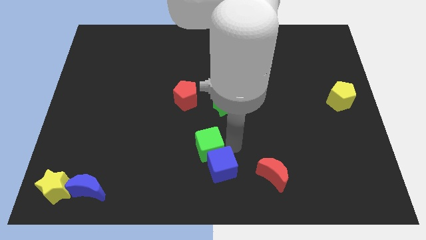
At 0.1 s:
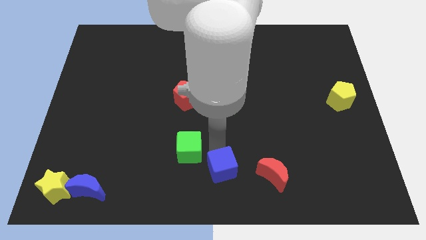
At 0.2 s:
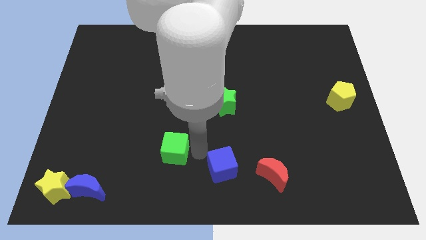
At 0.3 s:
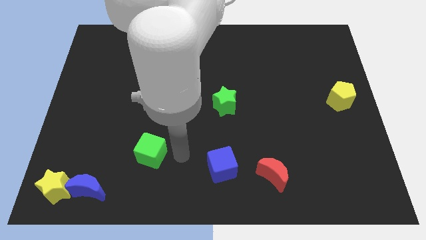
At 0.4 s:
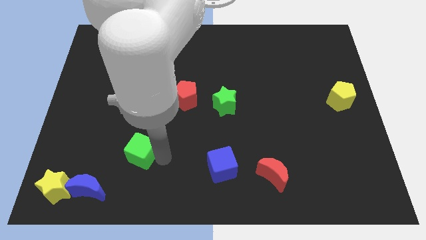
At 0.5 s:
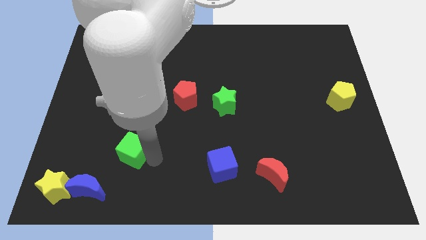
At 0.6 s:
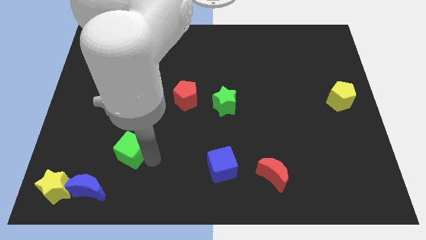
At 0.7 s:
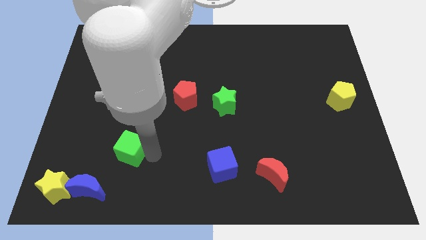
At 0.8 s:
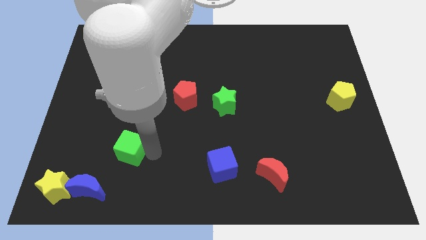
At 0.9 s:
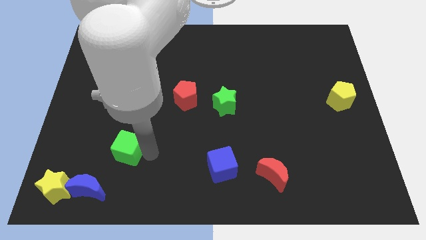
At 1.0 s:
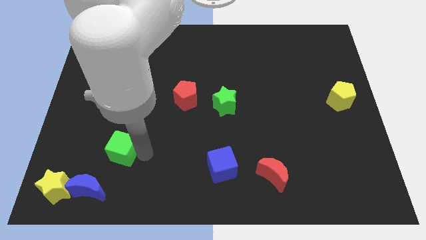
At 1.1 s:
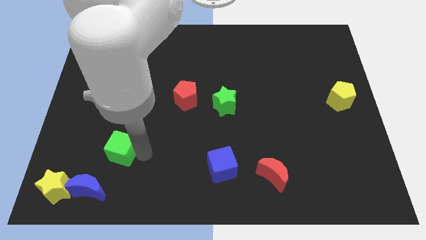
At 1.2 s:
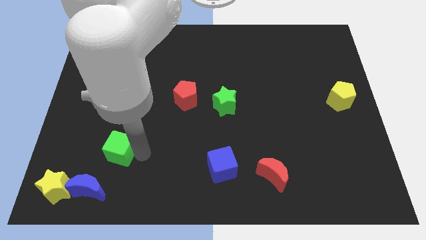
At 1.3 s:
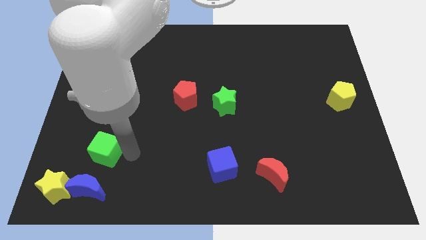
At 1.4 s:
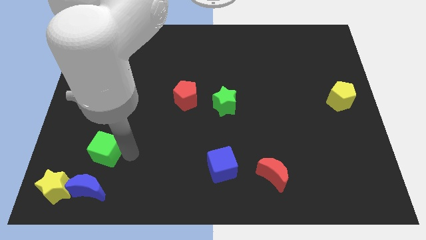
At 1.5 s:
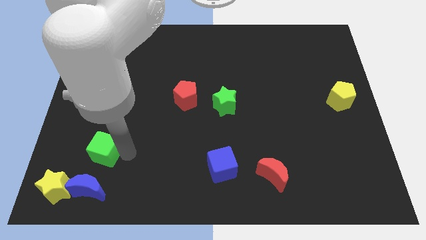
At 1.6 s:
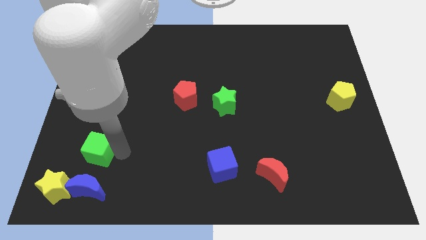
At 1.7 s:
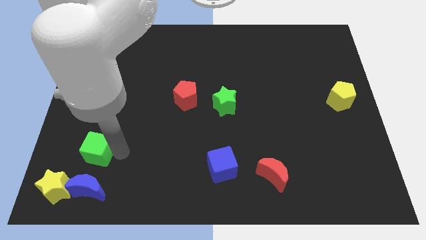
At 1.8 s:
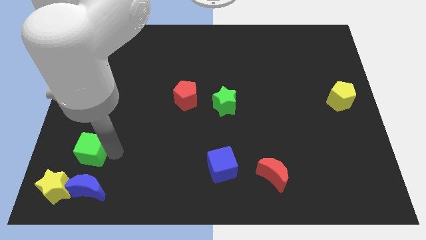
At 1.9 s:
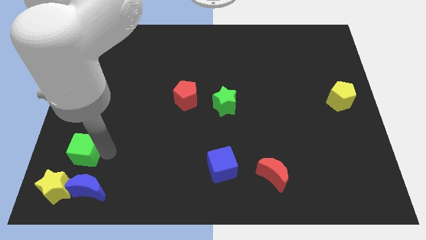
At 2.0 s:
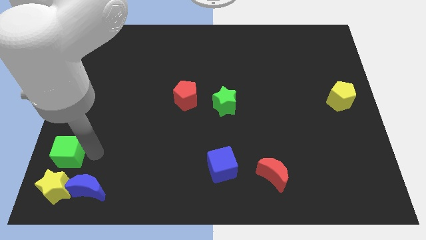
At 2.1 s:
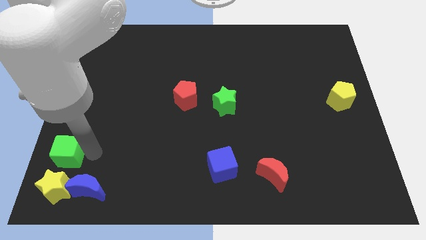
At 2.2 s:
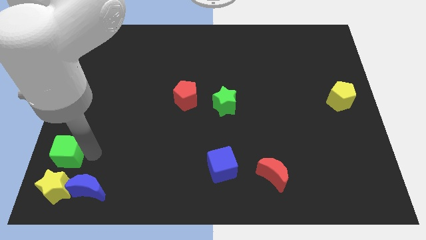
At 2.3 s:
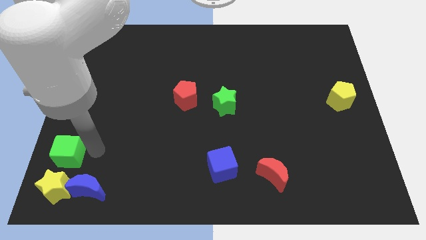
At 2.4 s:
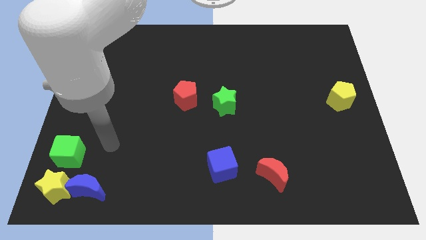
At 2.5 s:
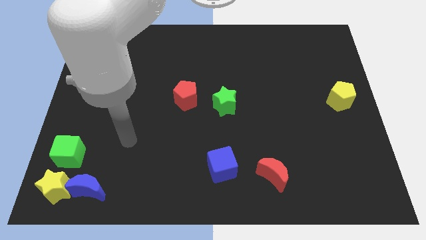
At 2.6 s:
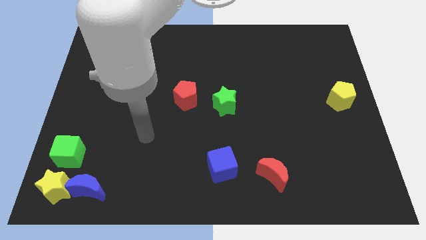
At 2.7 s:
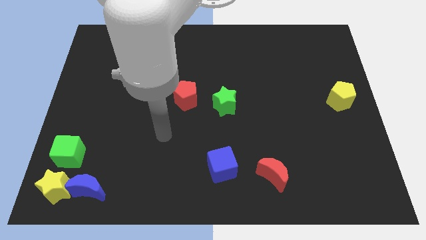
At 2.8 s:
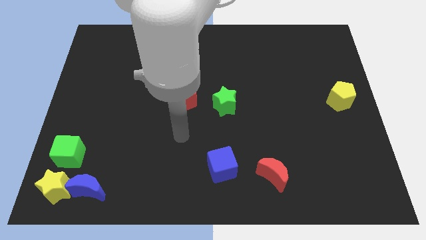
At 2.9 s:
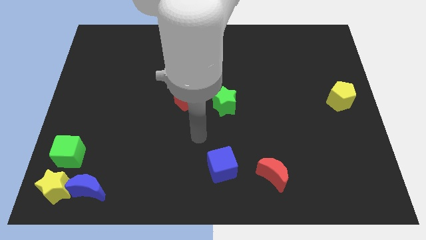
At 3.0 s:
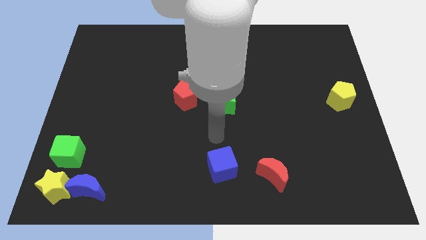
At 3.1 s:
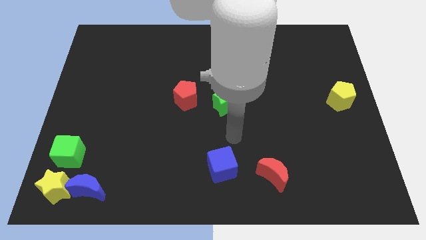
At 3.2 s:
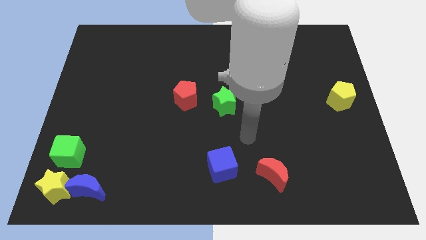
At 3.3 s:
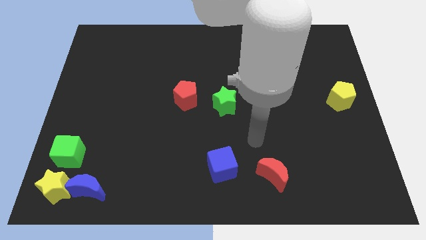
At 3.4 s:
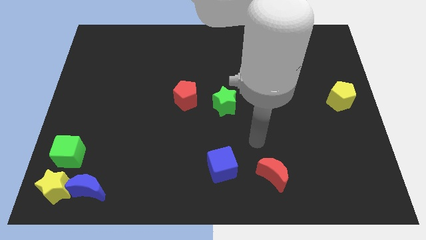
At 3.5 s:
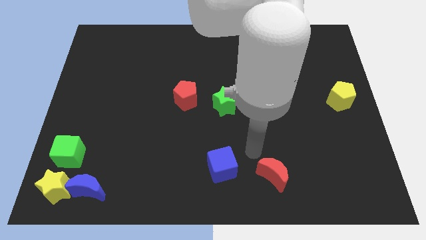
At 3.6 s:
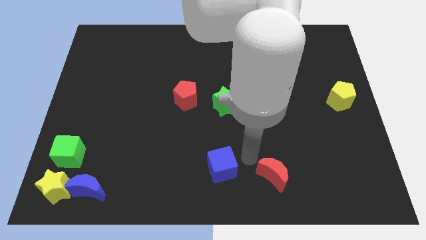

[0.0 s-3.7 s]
separate the green cube from the blue cube

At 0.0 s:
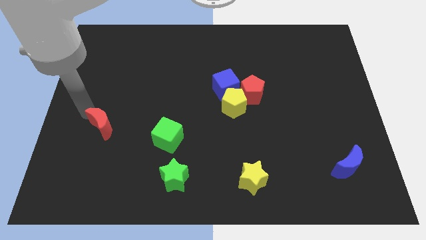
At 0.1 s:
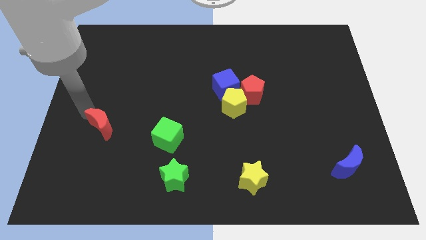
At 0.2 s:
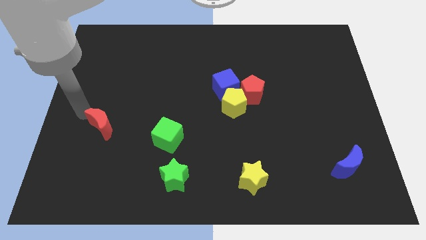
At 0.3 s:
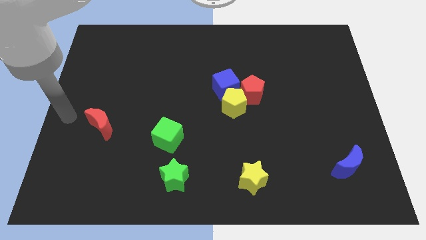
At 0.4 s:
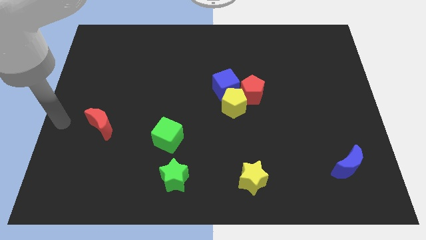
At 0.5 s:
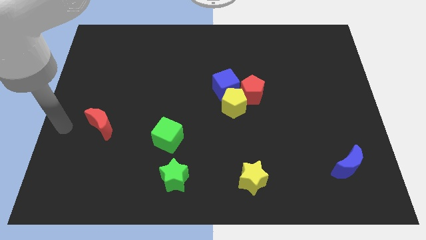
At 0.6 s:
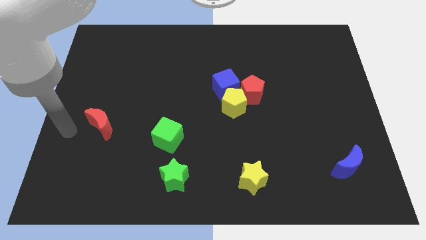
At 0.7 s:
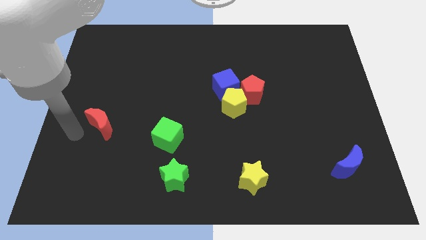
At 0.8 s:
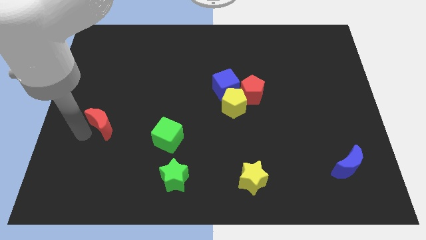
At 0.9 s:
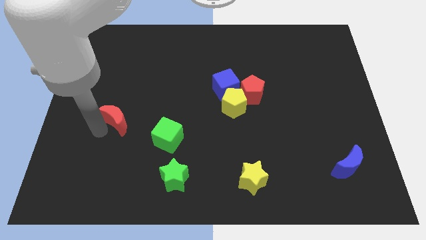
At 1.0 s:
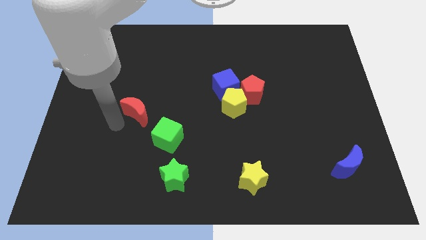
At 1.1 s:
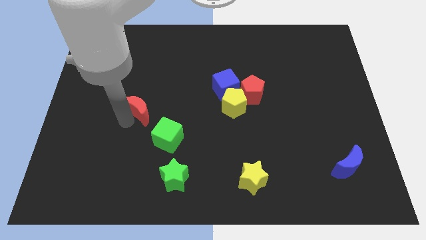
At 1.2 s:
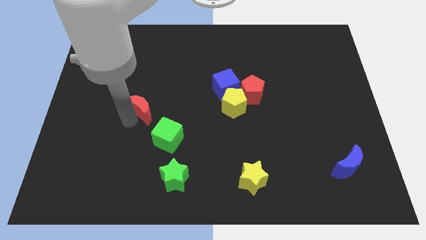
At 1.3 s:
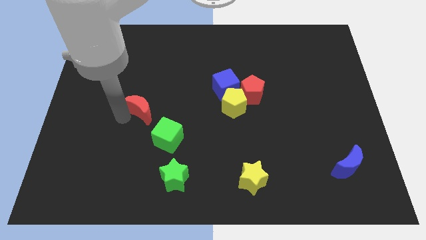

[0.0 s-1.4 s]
move the red crescent towards the top right of green cube

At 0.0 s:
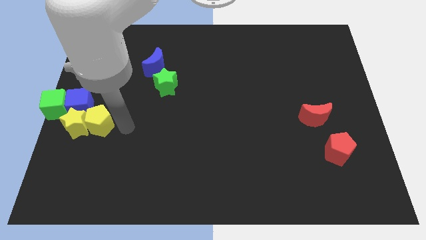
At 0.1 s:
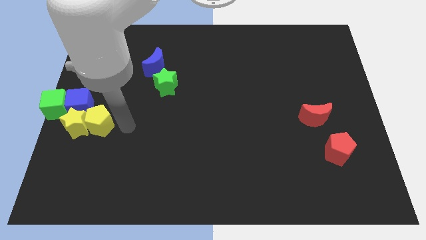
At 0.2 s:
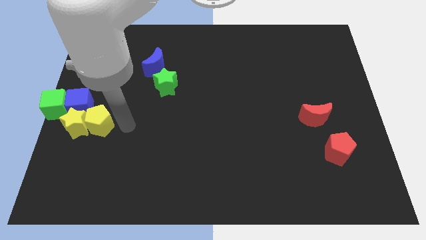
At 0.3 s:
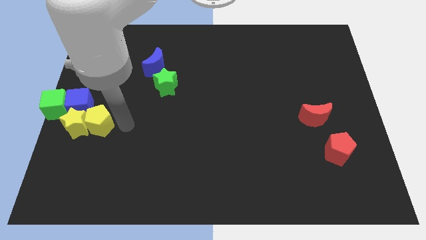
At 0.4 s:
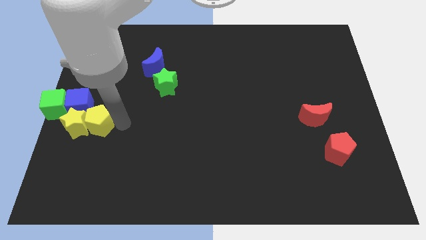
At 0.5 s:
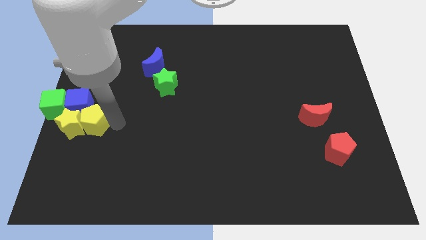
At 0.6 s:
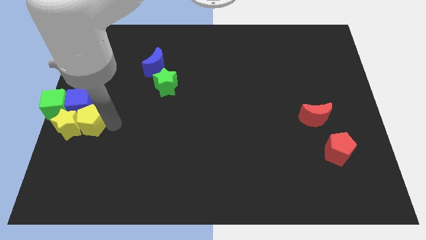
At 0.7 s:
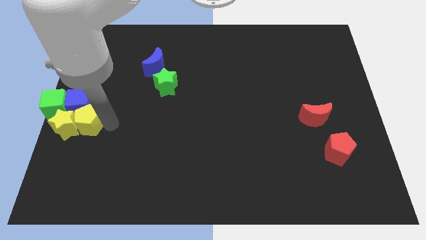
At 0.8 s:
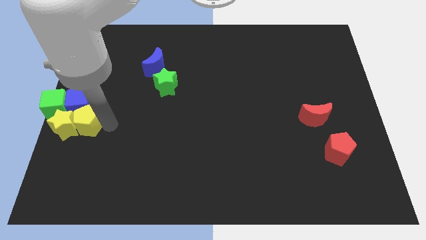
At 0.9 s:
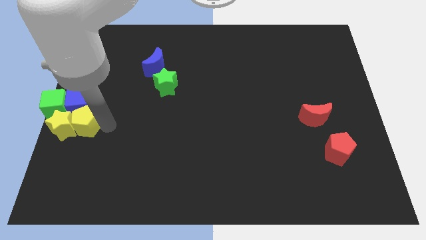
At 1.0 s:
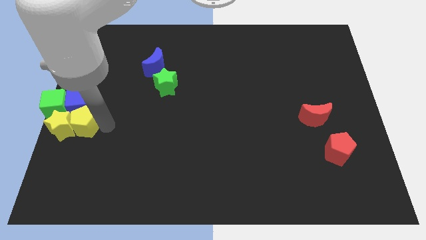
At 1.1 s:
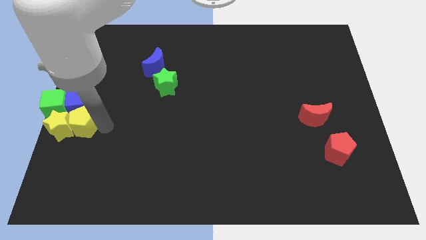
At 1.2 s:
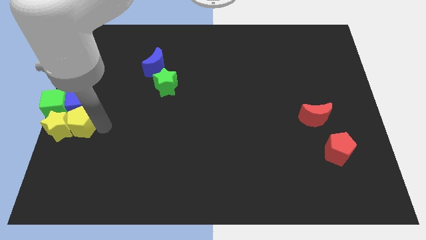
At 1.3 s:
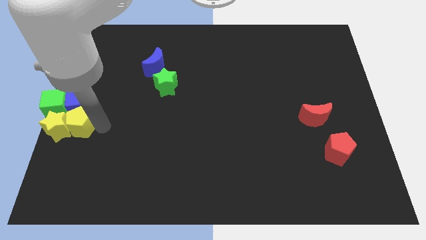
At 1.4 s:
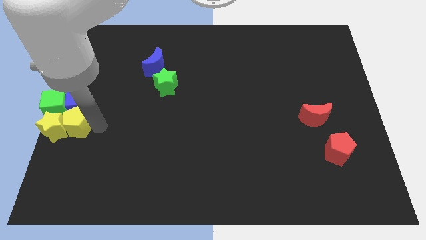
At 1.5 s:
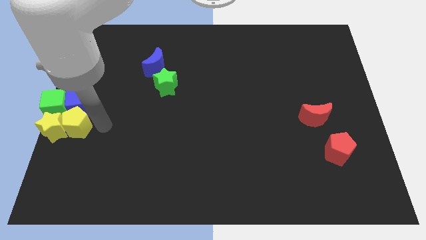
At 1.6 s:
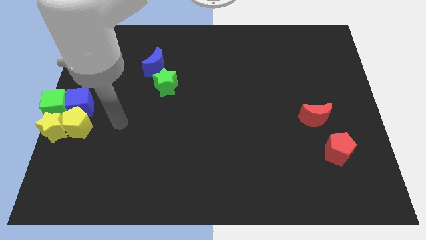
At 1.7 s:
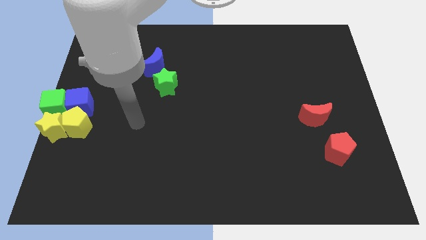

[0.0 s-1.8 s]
place yellow pentagon to the bottom of blue cube

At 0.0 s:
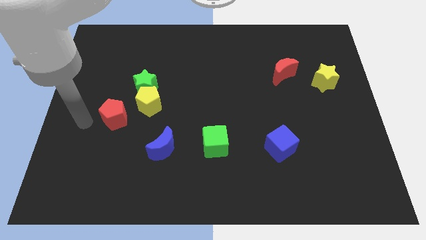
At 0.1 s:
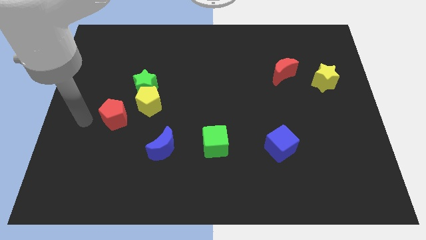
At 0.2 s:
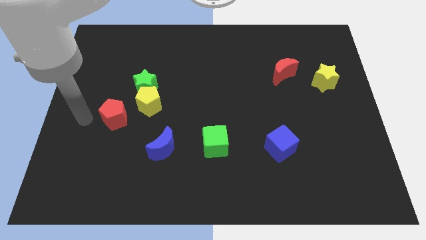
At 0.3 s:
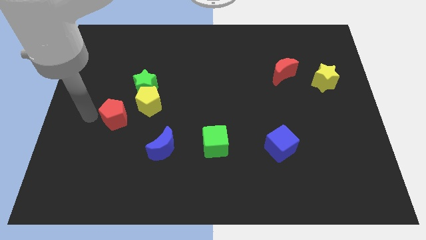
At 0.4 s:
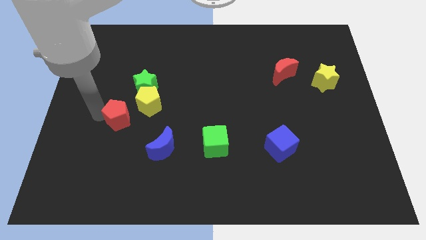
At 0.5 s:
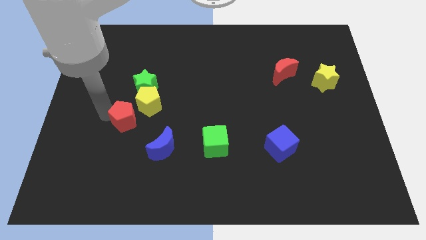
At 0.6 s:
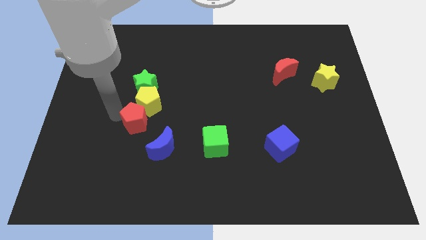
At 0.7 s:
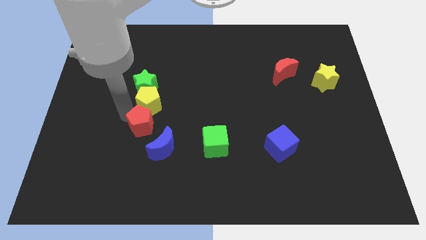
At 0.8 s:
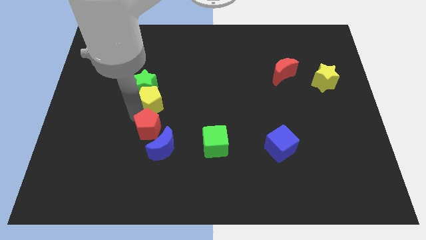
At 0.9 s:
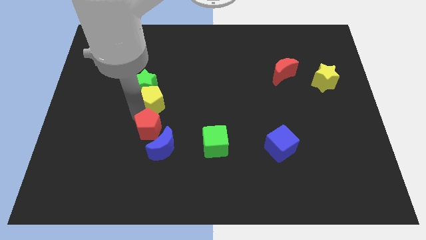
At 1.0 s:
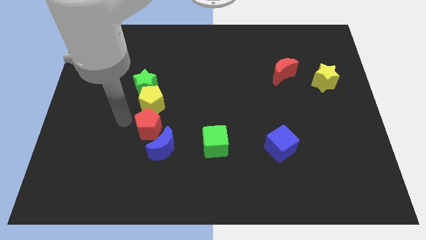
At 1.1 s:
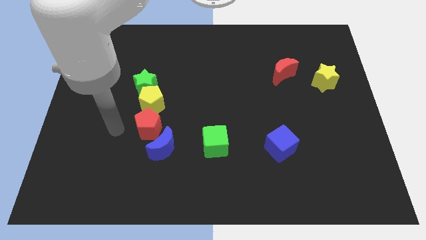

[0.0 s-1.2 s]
place the red pentagon in between the blue crescent and yellow pentagon

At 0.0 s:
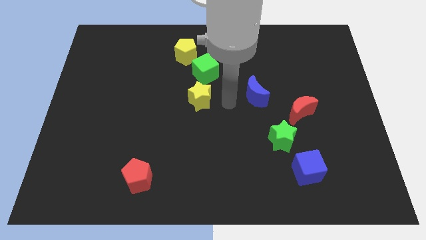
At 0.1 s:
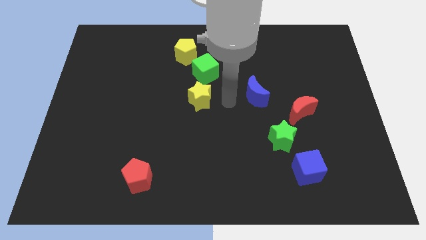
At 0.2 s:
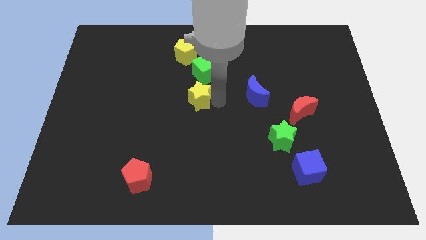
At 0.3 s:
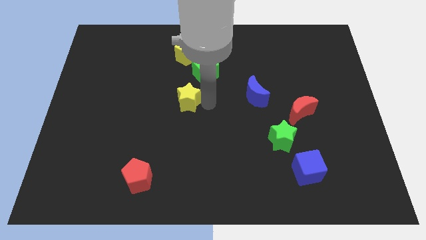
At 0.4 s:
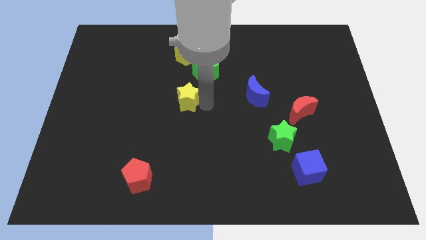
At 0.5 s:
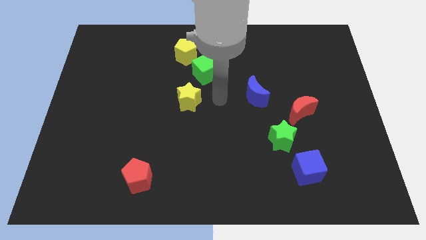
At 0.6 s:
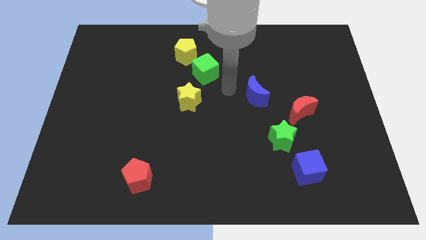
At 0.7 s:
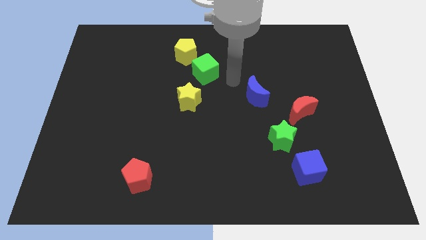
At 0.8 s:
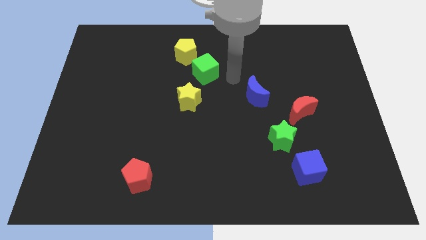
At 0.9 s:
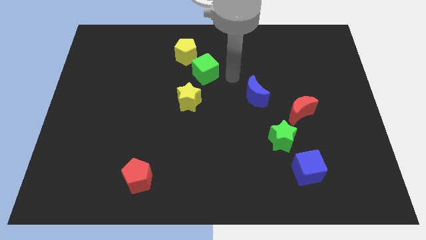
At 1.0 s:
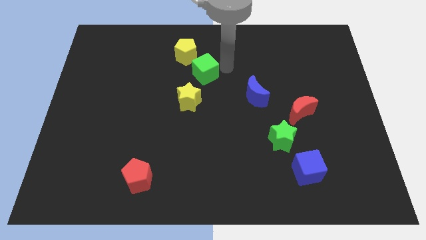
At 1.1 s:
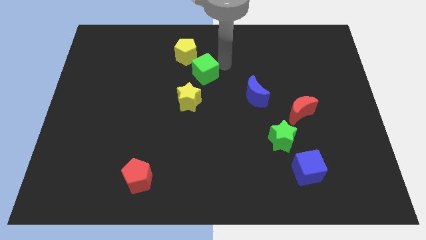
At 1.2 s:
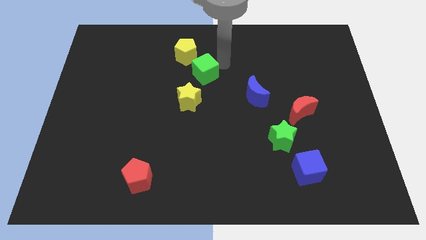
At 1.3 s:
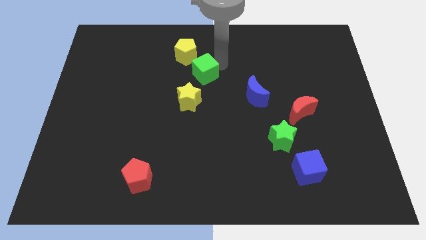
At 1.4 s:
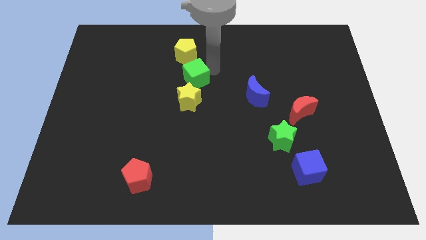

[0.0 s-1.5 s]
move the yellow star diagonally to the bottom left of the green cube
